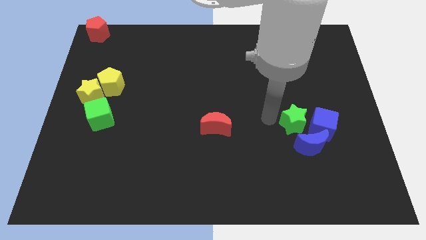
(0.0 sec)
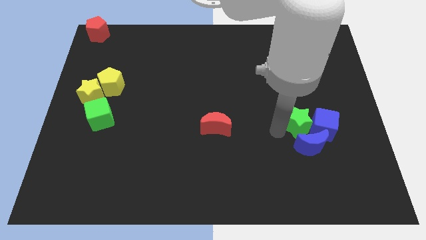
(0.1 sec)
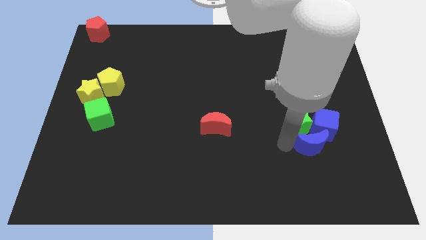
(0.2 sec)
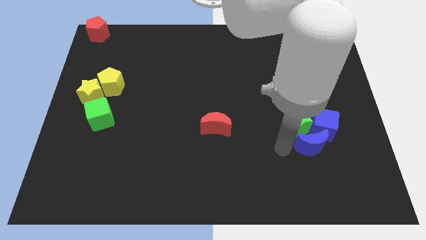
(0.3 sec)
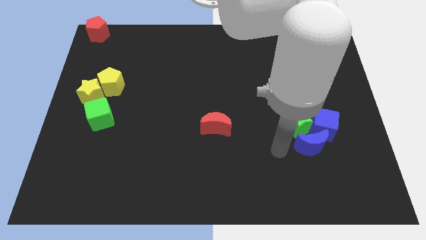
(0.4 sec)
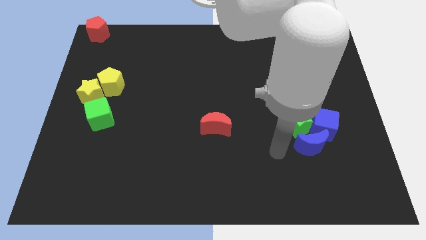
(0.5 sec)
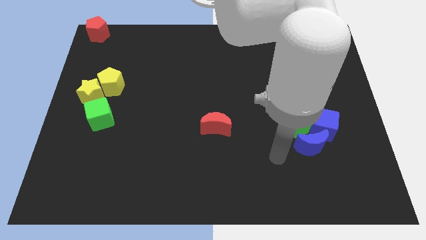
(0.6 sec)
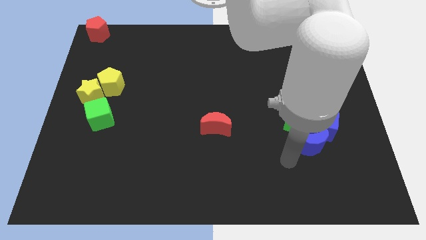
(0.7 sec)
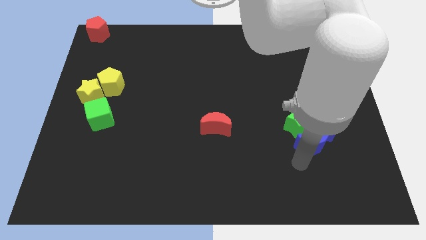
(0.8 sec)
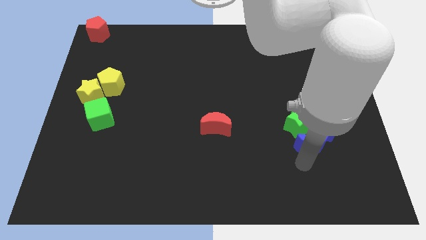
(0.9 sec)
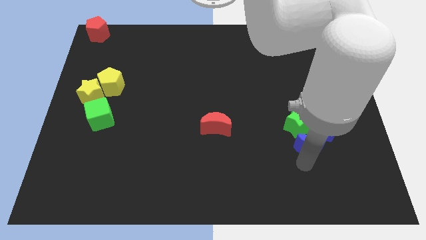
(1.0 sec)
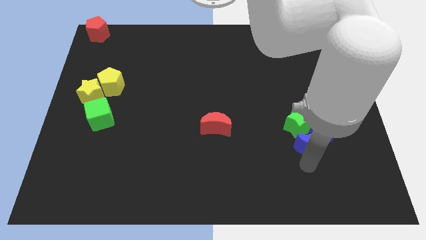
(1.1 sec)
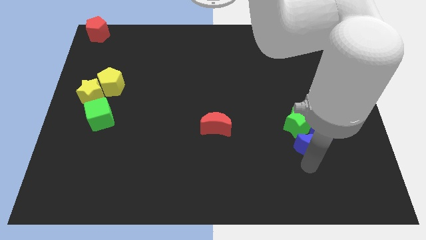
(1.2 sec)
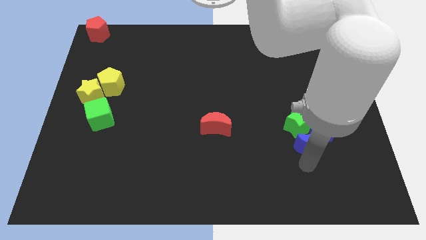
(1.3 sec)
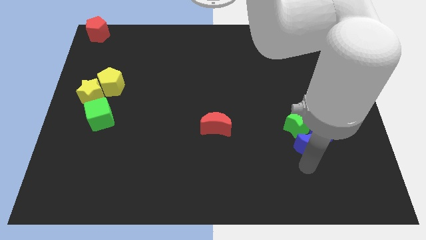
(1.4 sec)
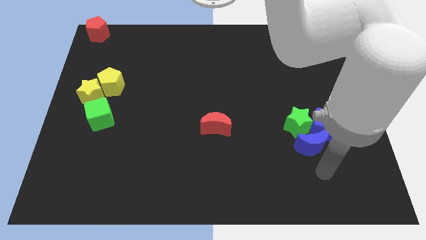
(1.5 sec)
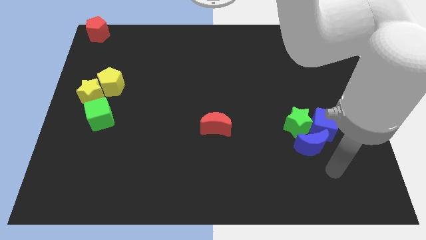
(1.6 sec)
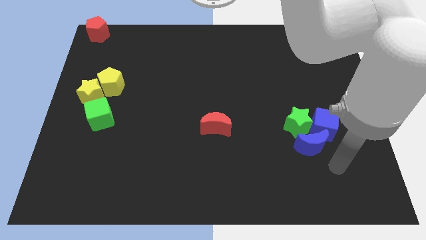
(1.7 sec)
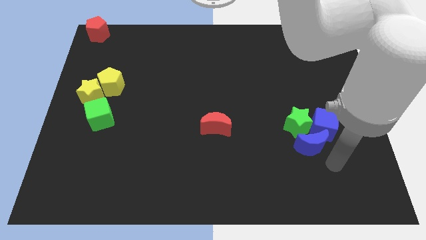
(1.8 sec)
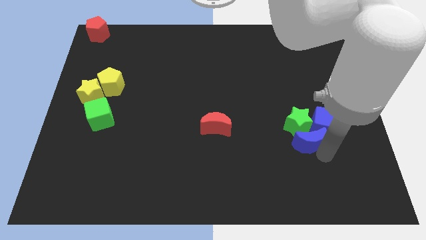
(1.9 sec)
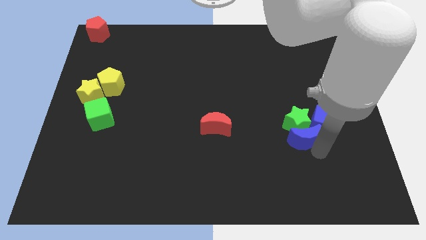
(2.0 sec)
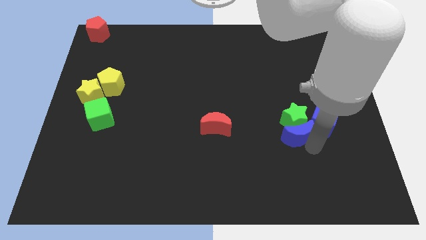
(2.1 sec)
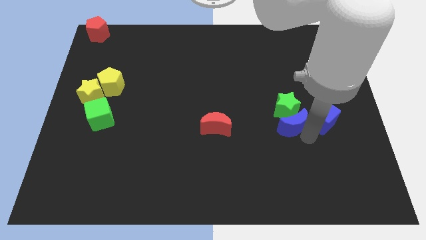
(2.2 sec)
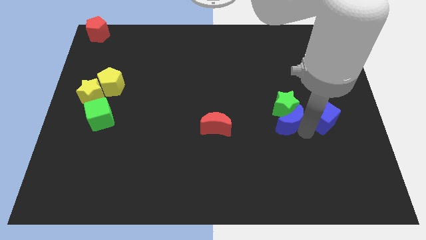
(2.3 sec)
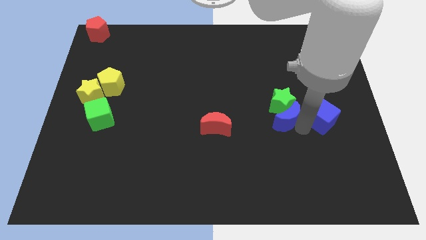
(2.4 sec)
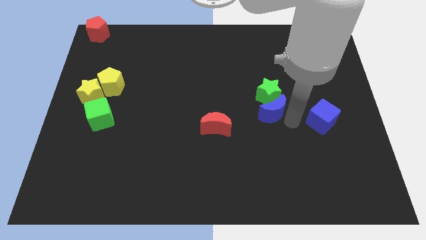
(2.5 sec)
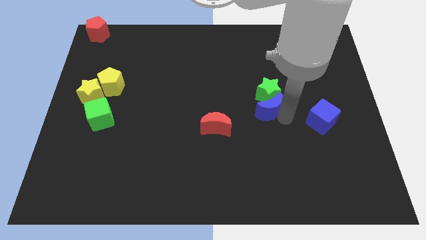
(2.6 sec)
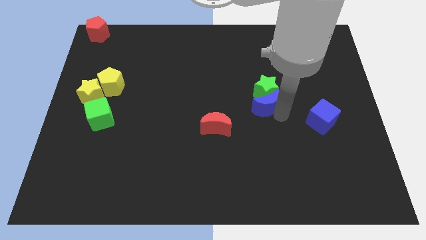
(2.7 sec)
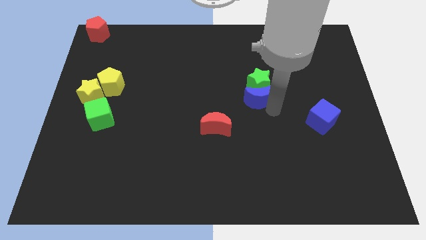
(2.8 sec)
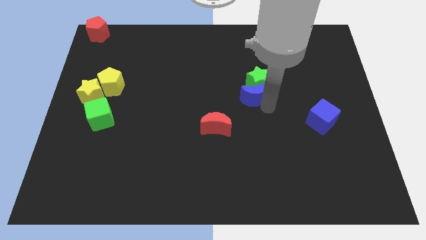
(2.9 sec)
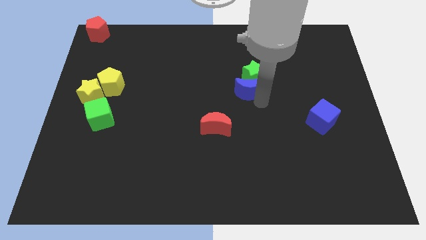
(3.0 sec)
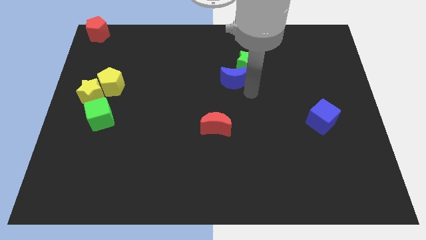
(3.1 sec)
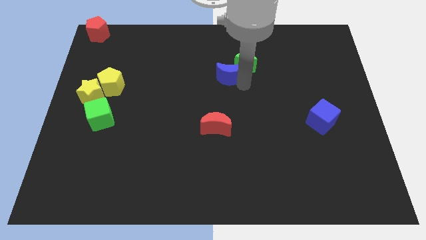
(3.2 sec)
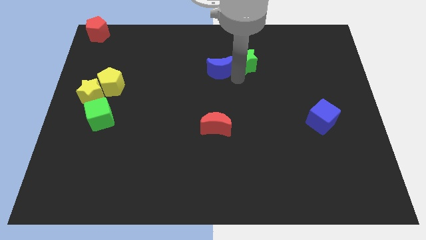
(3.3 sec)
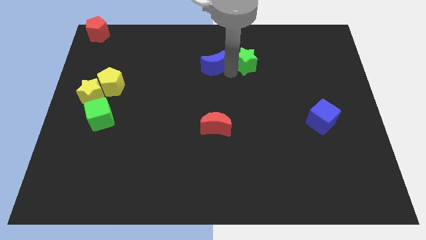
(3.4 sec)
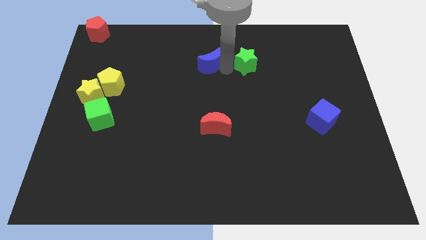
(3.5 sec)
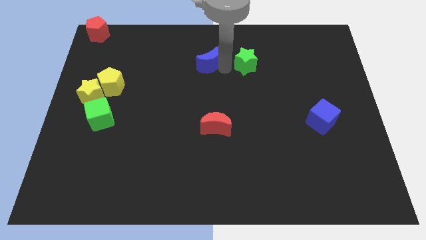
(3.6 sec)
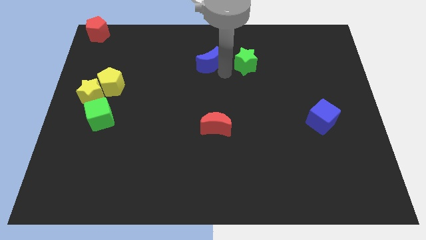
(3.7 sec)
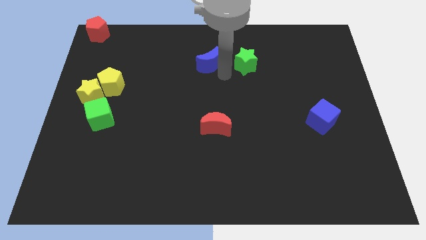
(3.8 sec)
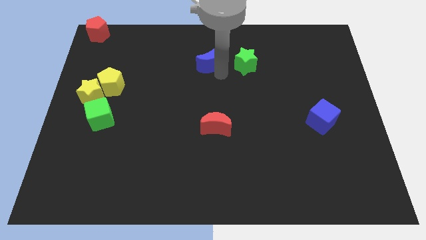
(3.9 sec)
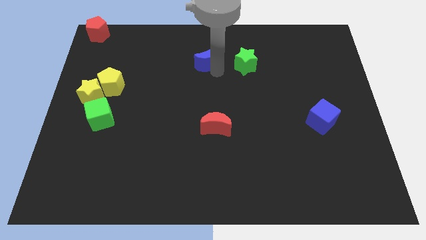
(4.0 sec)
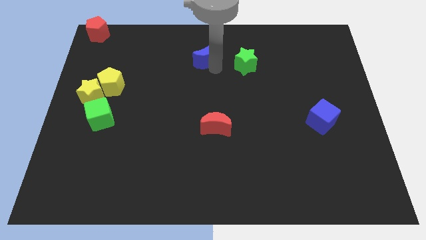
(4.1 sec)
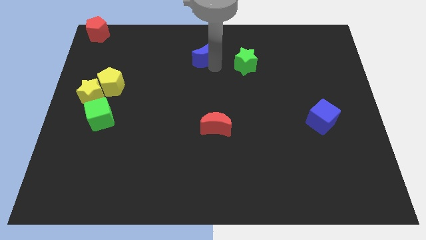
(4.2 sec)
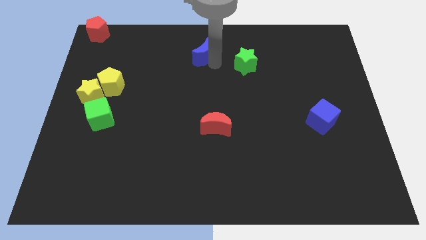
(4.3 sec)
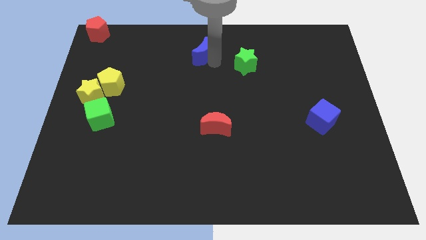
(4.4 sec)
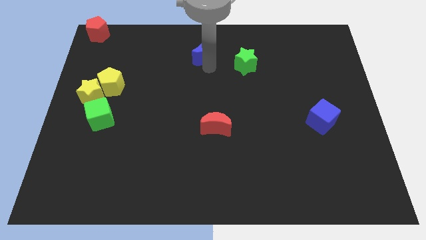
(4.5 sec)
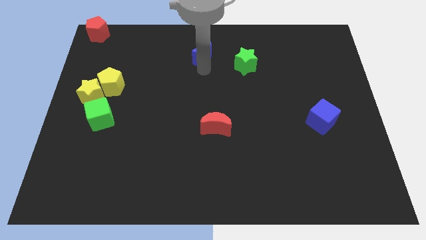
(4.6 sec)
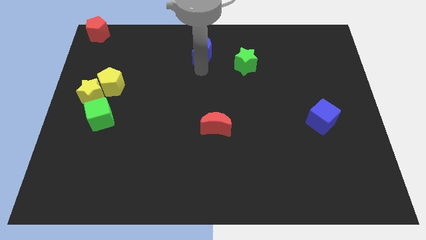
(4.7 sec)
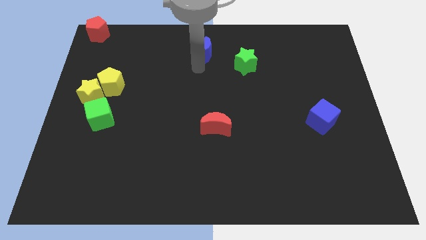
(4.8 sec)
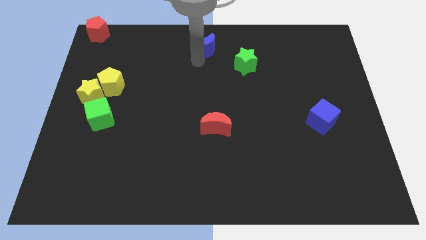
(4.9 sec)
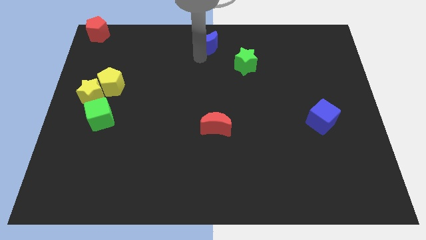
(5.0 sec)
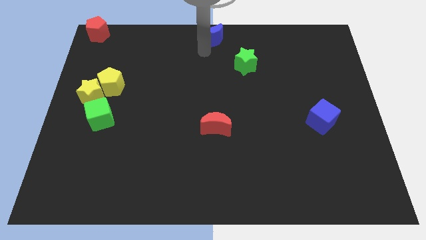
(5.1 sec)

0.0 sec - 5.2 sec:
place the blue crescent above the red crescent

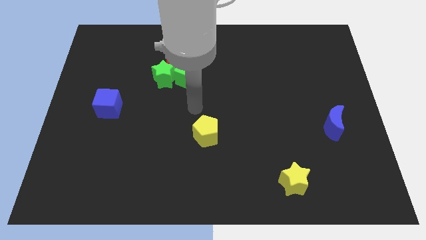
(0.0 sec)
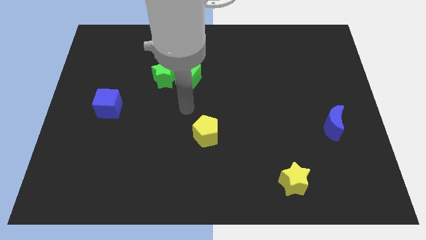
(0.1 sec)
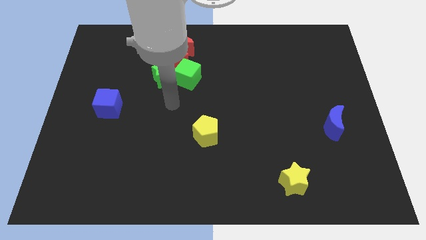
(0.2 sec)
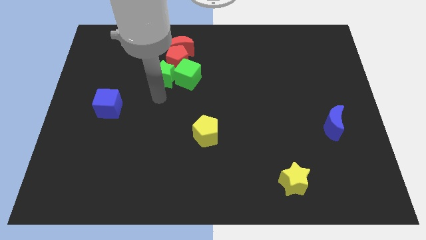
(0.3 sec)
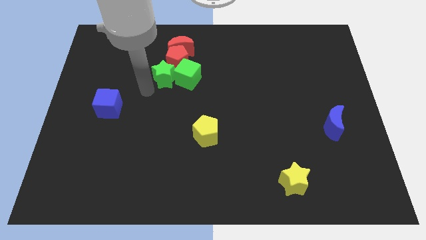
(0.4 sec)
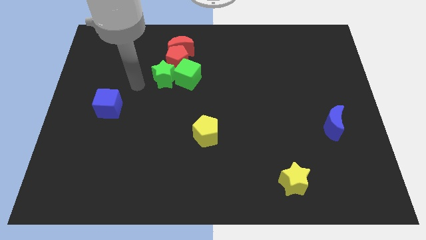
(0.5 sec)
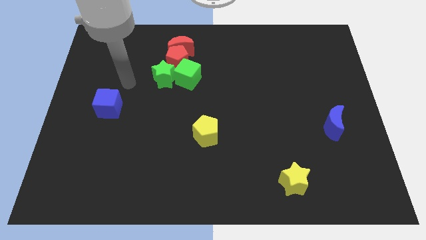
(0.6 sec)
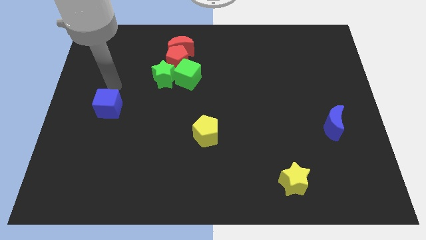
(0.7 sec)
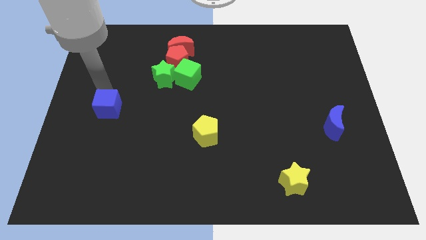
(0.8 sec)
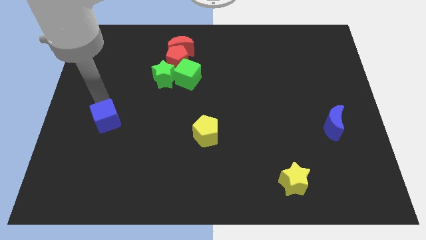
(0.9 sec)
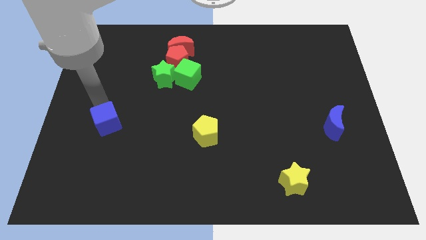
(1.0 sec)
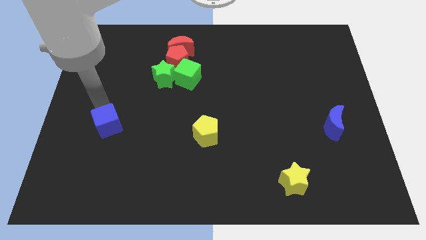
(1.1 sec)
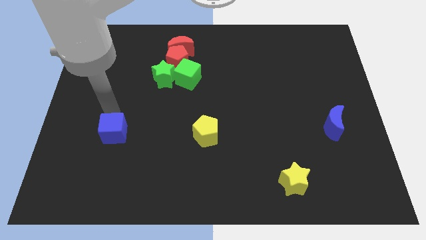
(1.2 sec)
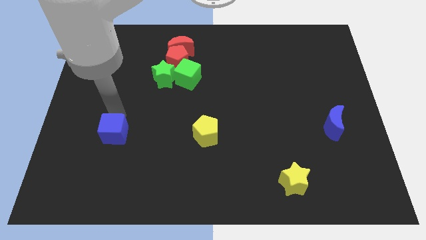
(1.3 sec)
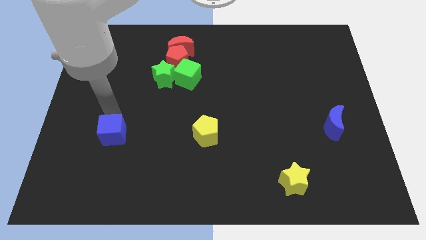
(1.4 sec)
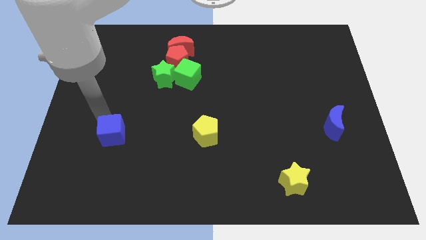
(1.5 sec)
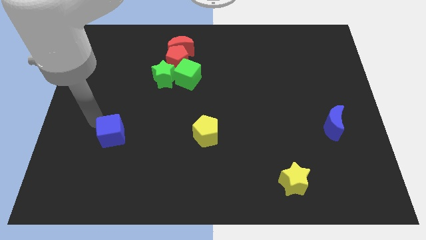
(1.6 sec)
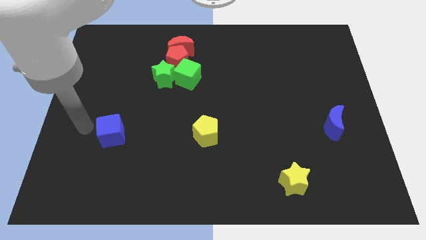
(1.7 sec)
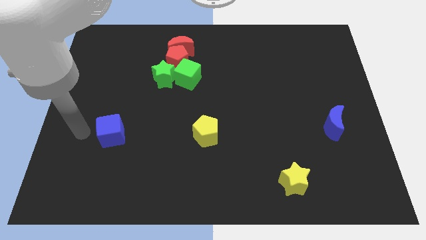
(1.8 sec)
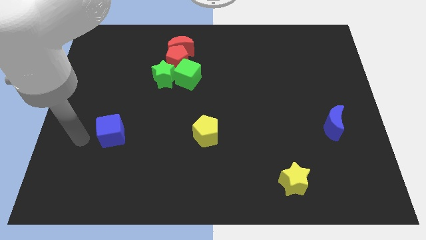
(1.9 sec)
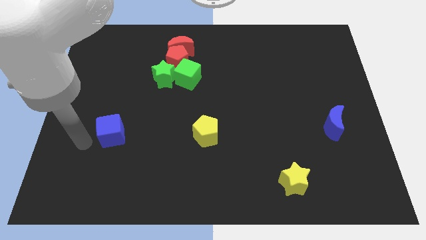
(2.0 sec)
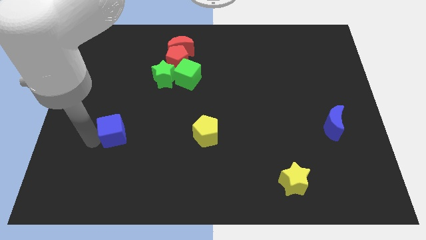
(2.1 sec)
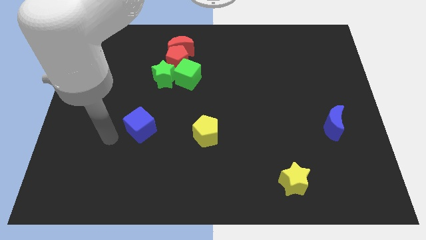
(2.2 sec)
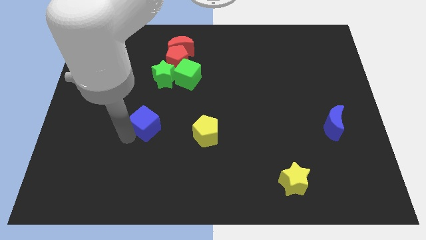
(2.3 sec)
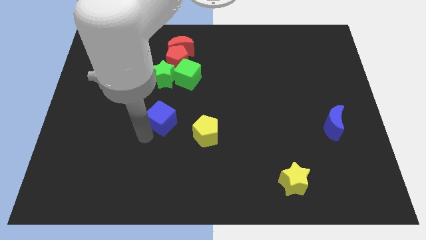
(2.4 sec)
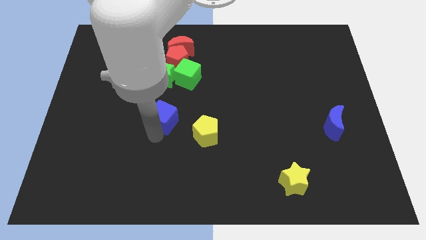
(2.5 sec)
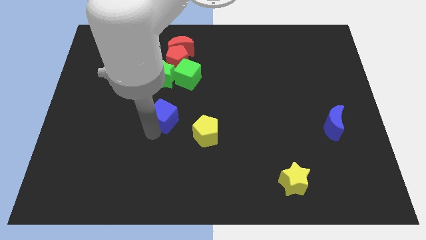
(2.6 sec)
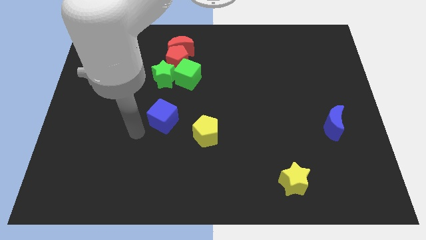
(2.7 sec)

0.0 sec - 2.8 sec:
move blue cube slightly right

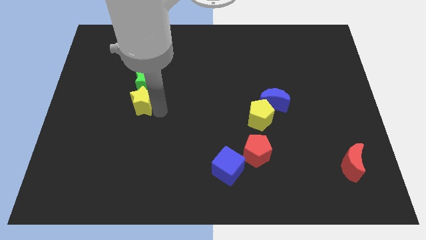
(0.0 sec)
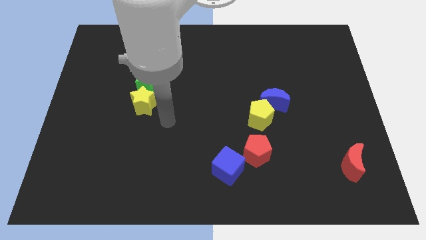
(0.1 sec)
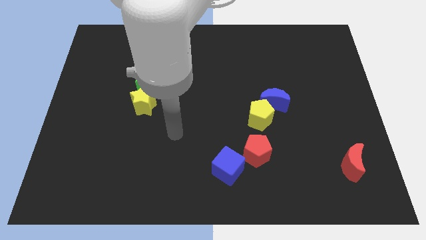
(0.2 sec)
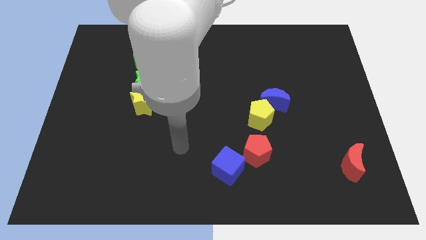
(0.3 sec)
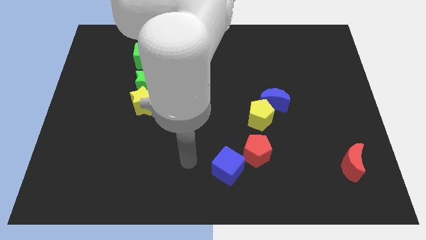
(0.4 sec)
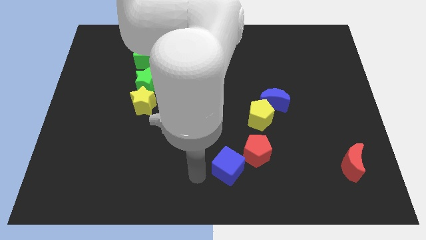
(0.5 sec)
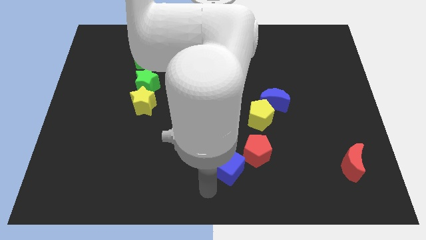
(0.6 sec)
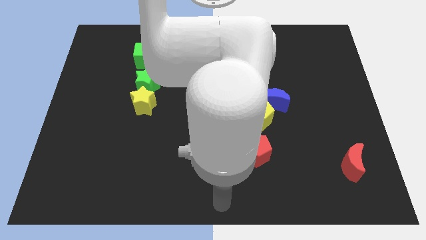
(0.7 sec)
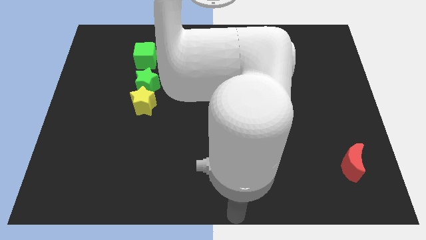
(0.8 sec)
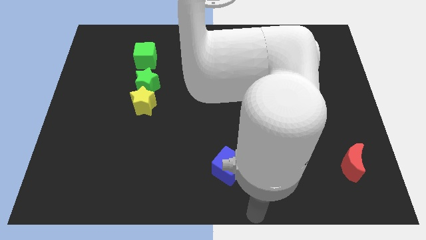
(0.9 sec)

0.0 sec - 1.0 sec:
move your arm to the bottom center of the board
